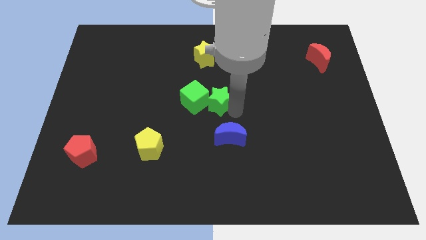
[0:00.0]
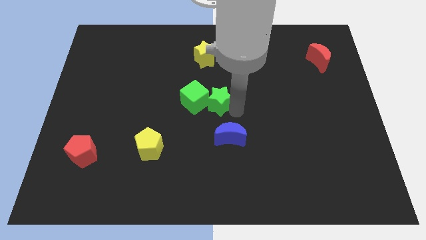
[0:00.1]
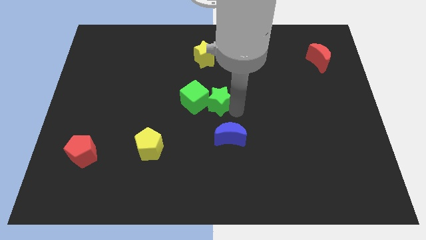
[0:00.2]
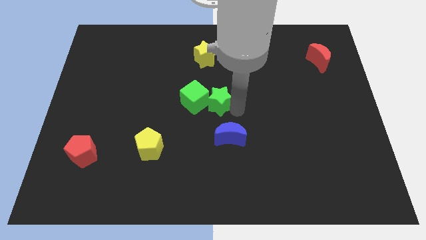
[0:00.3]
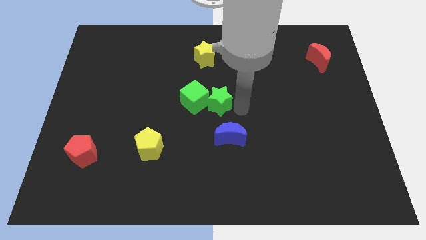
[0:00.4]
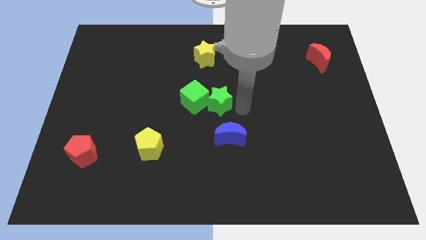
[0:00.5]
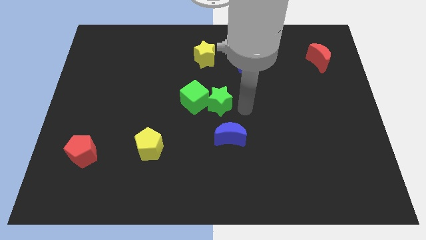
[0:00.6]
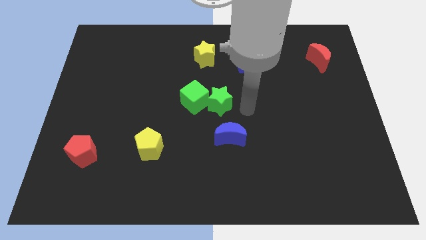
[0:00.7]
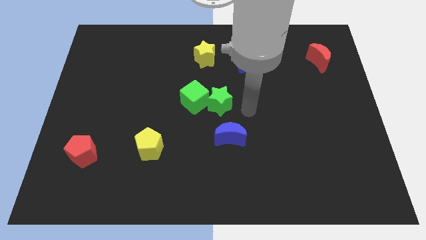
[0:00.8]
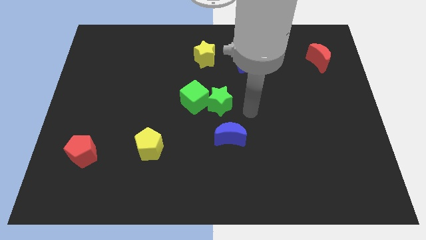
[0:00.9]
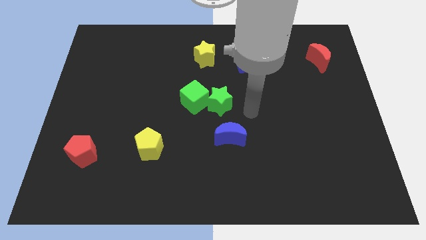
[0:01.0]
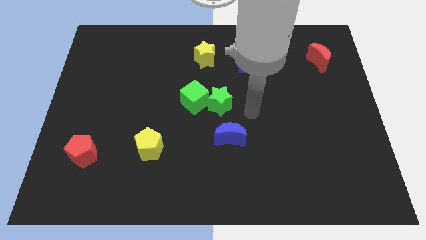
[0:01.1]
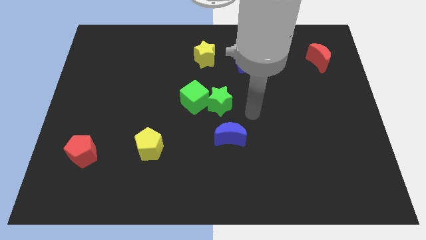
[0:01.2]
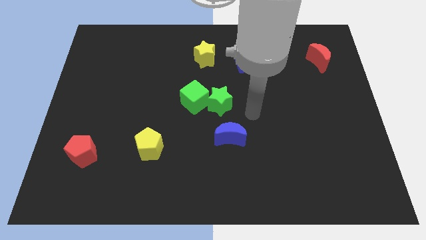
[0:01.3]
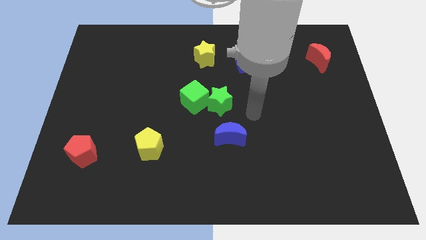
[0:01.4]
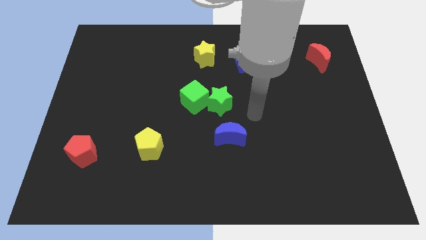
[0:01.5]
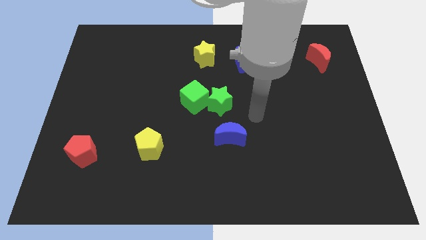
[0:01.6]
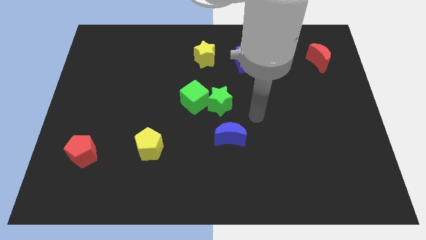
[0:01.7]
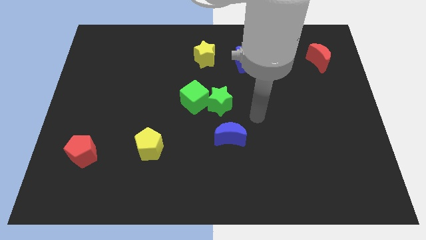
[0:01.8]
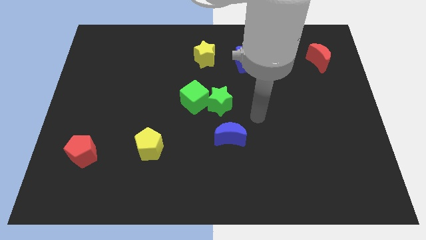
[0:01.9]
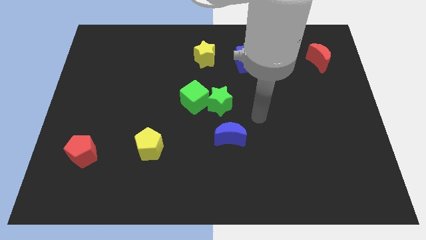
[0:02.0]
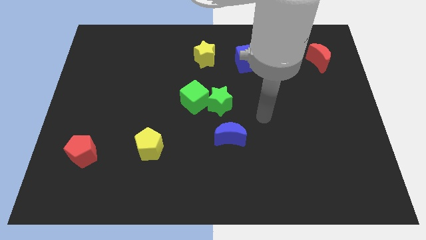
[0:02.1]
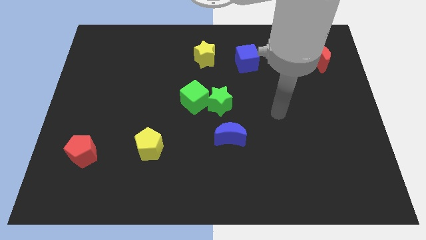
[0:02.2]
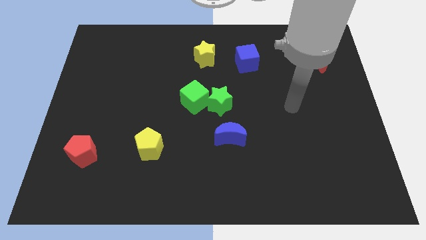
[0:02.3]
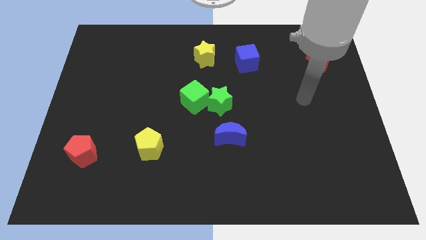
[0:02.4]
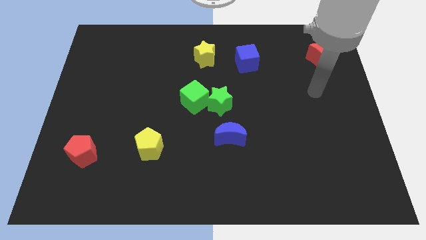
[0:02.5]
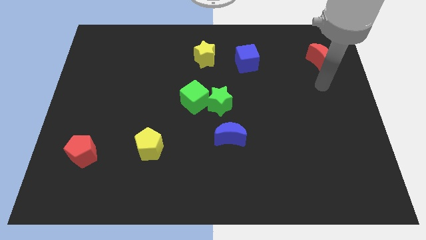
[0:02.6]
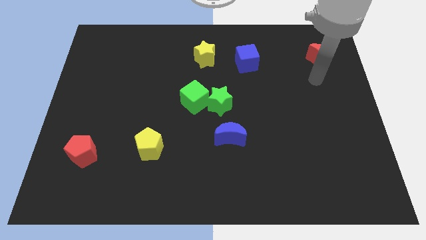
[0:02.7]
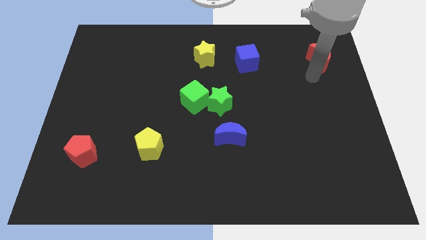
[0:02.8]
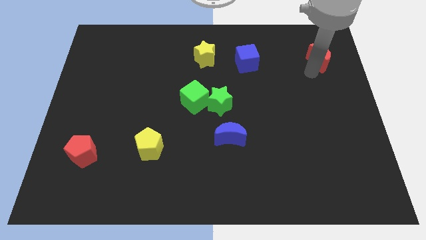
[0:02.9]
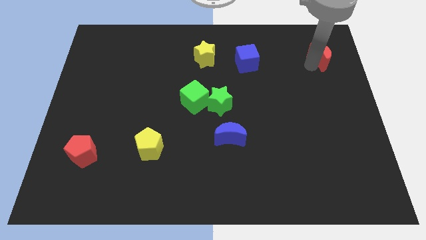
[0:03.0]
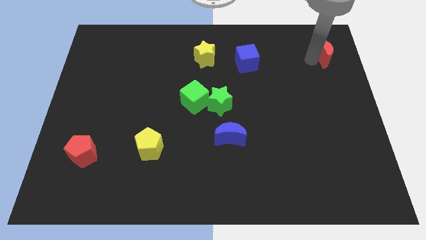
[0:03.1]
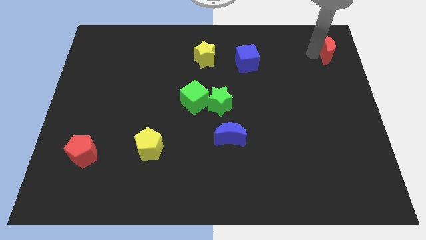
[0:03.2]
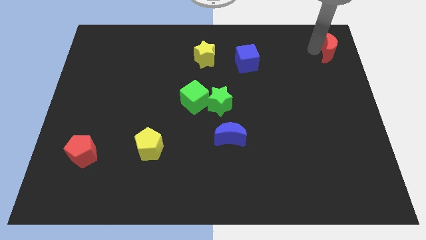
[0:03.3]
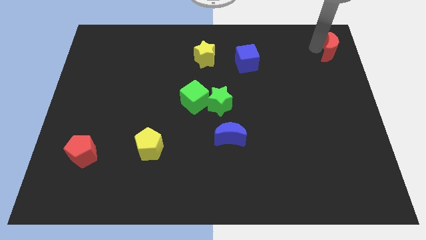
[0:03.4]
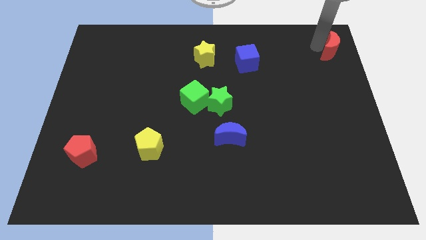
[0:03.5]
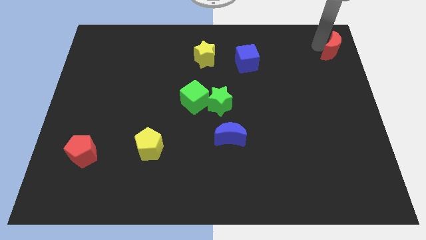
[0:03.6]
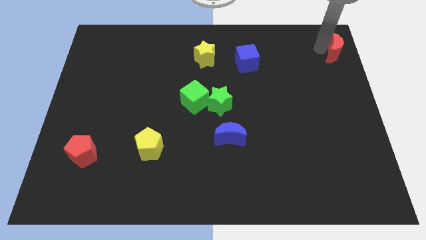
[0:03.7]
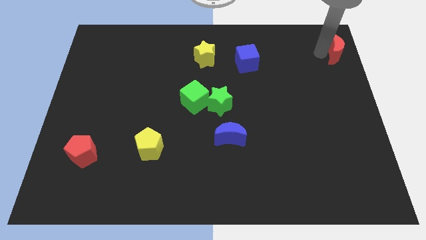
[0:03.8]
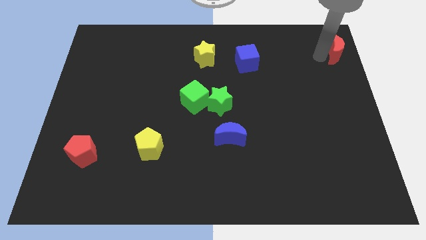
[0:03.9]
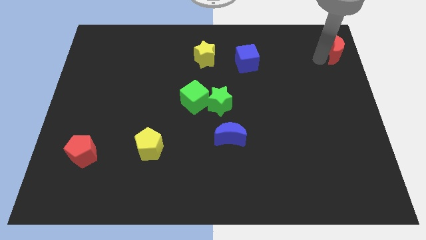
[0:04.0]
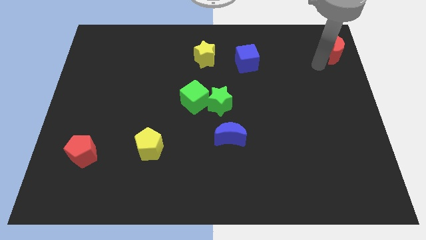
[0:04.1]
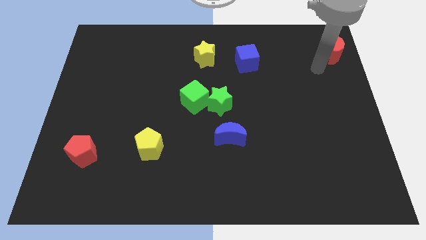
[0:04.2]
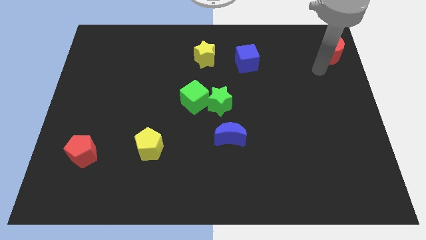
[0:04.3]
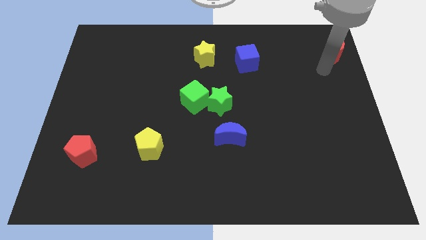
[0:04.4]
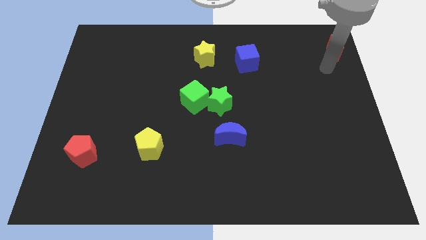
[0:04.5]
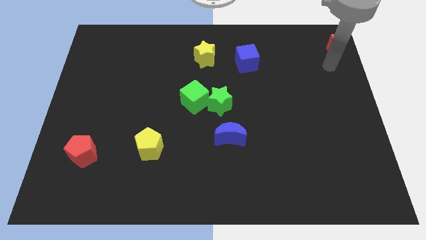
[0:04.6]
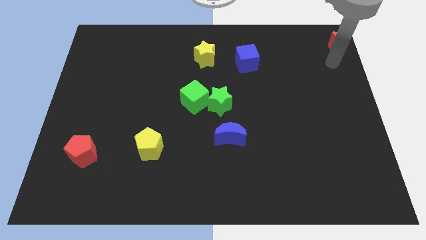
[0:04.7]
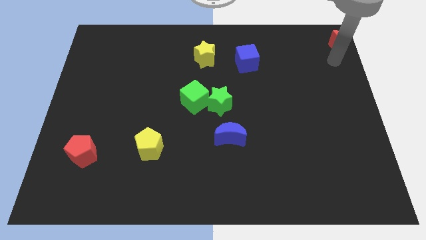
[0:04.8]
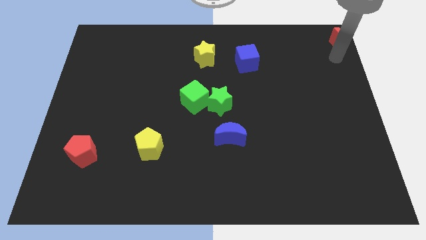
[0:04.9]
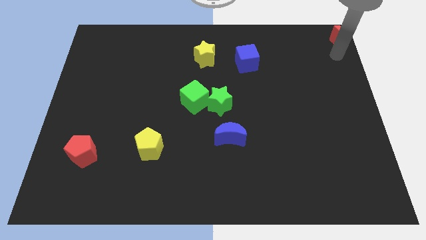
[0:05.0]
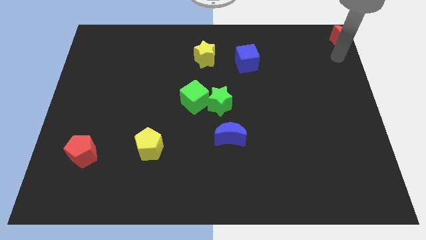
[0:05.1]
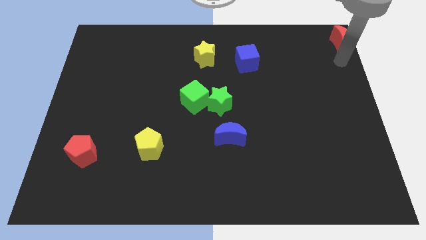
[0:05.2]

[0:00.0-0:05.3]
push red moon towards top right corner of the board

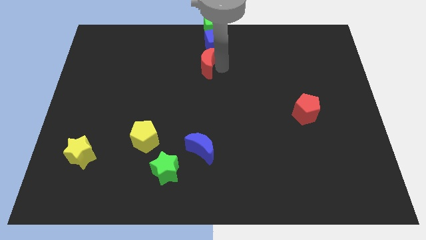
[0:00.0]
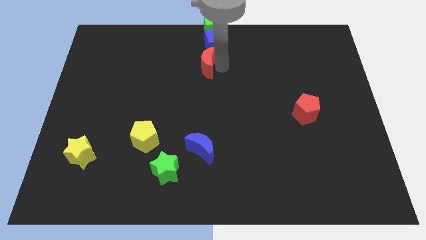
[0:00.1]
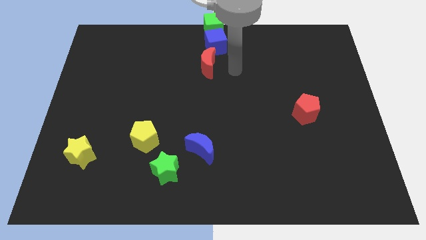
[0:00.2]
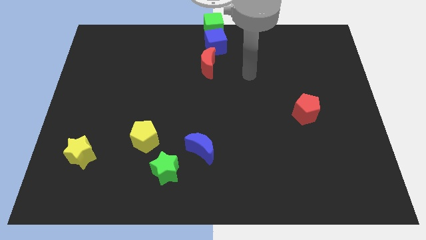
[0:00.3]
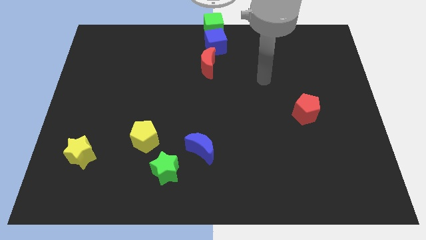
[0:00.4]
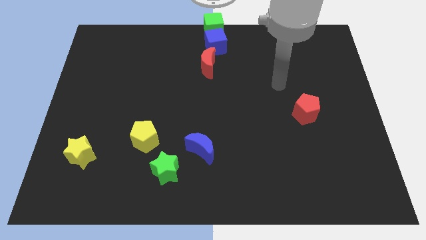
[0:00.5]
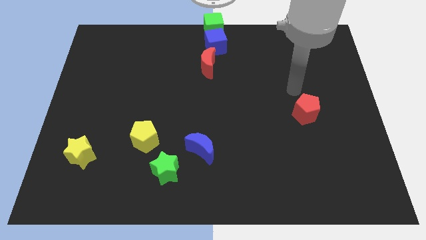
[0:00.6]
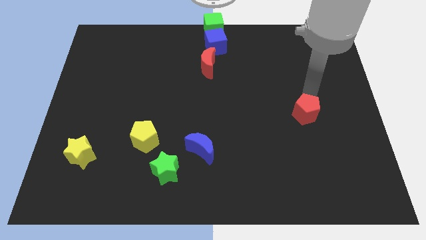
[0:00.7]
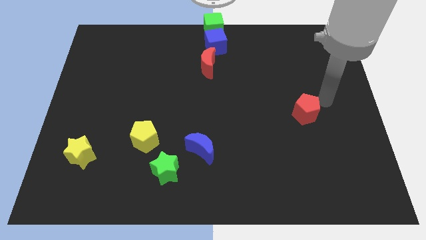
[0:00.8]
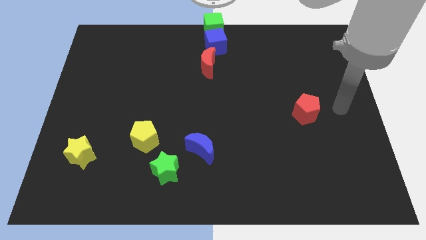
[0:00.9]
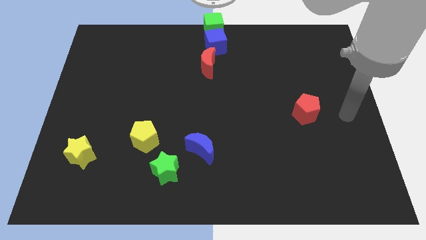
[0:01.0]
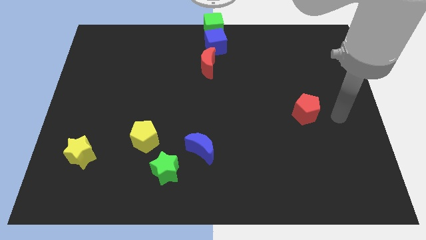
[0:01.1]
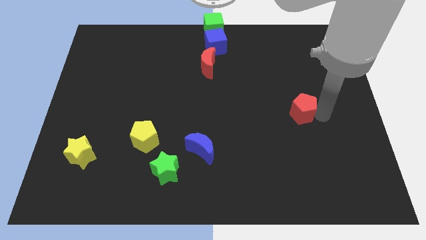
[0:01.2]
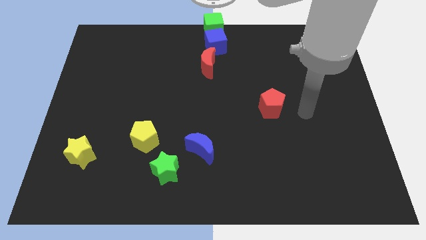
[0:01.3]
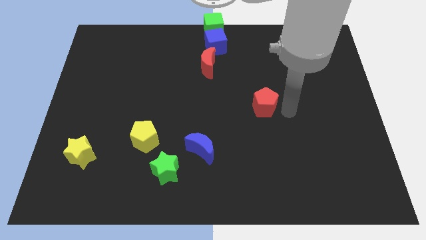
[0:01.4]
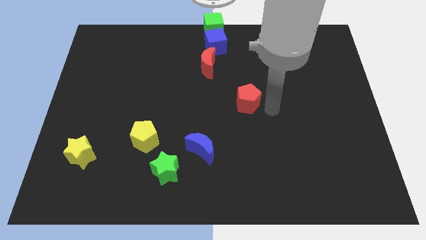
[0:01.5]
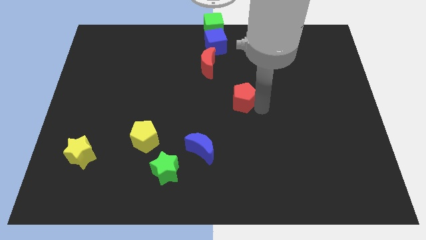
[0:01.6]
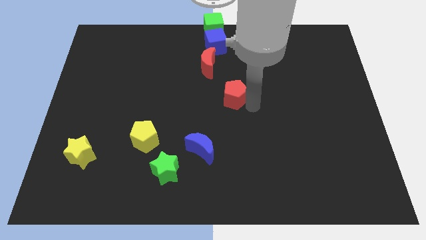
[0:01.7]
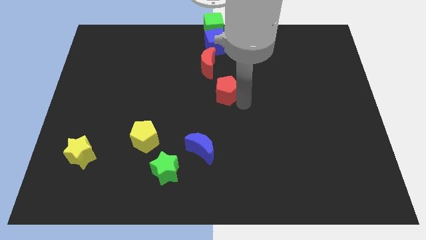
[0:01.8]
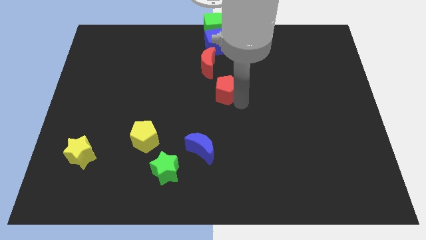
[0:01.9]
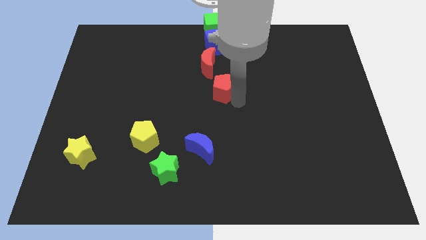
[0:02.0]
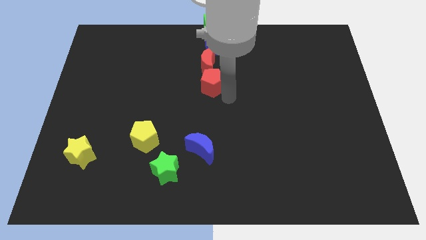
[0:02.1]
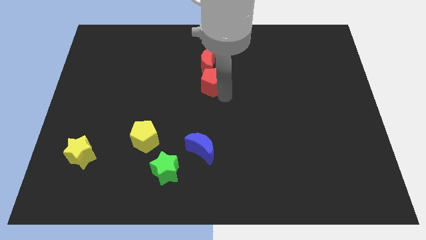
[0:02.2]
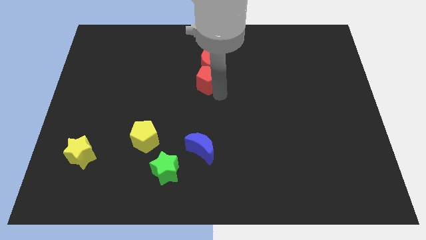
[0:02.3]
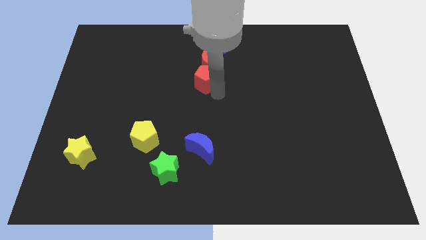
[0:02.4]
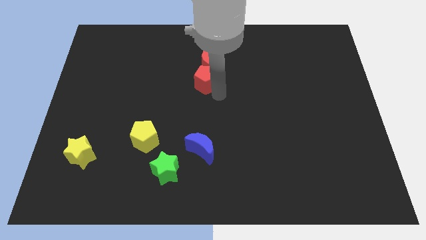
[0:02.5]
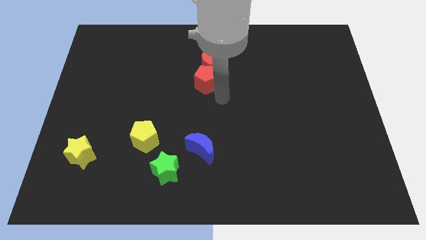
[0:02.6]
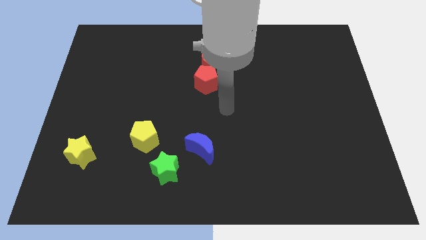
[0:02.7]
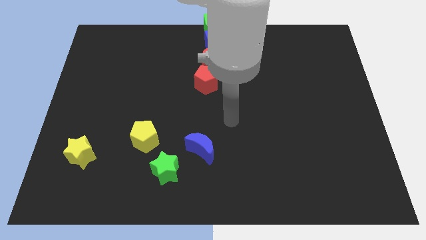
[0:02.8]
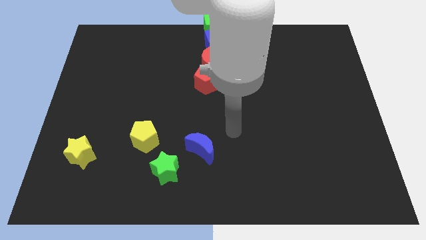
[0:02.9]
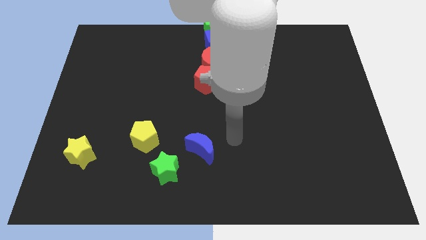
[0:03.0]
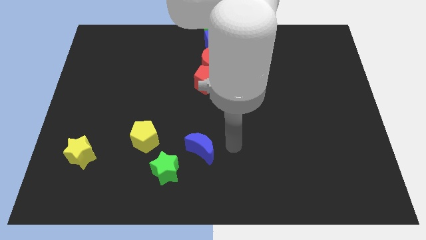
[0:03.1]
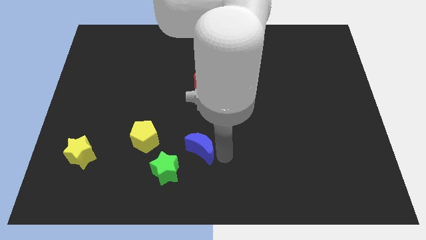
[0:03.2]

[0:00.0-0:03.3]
place the red pentagon below the red crescent

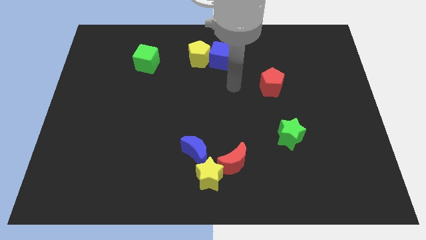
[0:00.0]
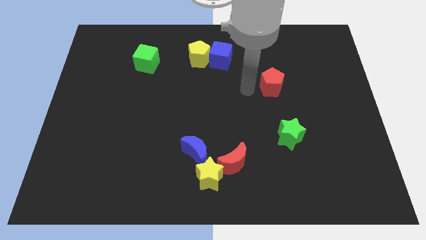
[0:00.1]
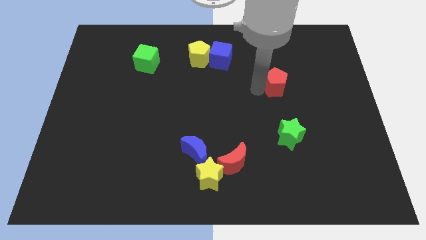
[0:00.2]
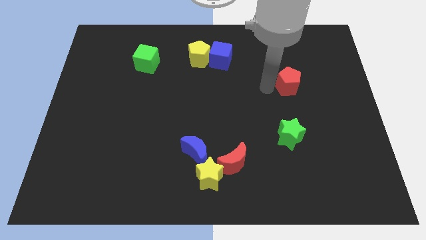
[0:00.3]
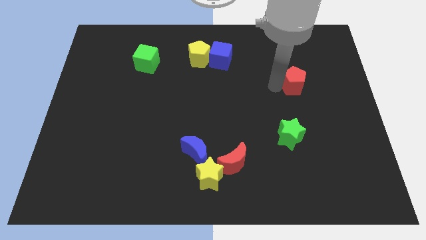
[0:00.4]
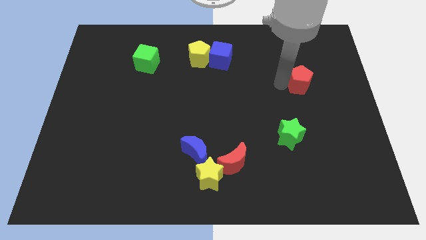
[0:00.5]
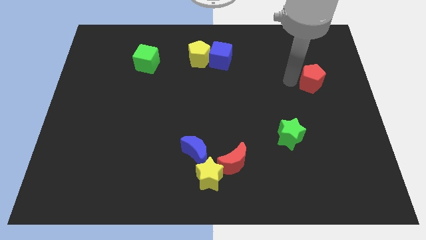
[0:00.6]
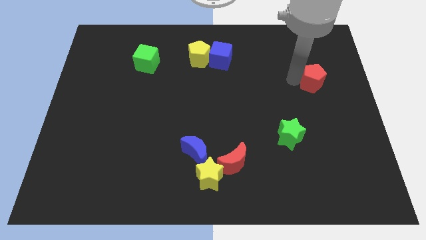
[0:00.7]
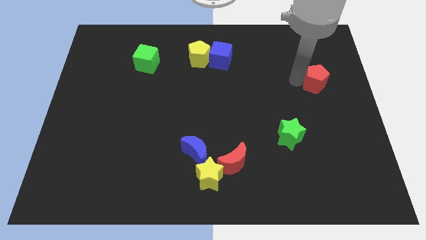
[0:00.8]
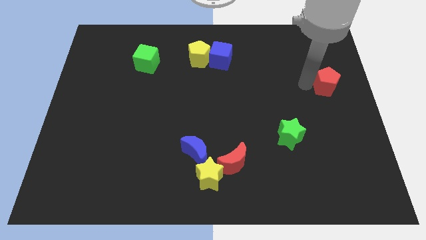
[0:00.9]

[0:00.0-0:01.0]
move the red pentagon to the right
